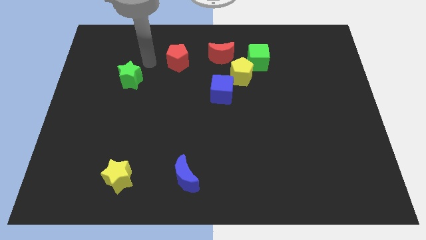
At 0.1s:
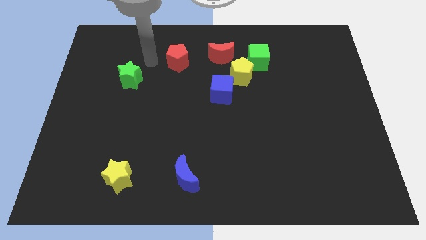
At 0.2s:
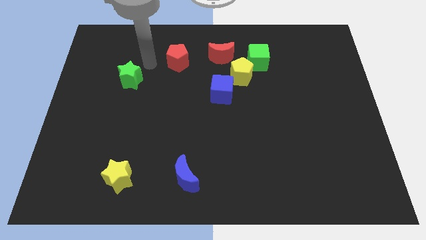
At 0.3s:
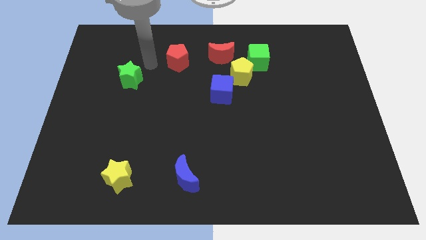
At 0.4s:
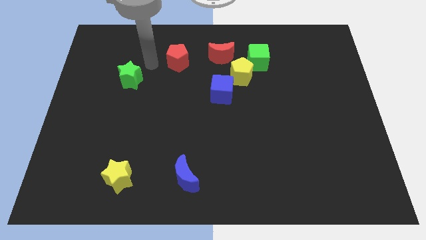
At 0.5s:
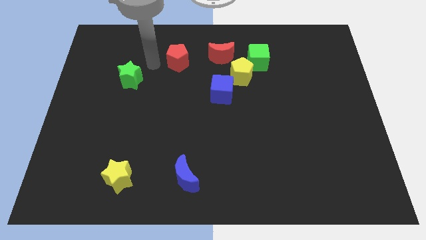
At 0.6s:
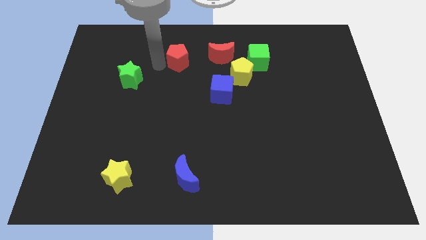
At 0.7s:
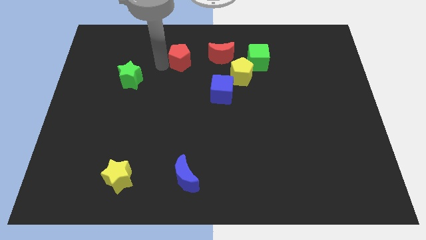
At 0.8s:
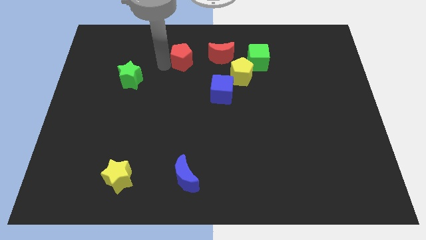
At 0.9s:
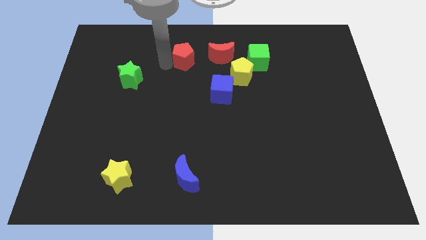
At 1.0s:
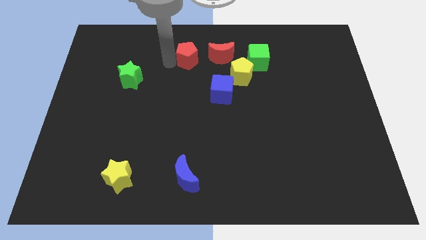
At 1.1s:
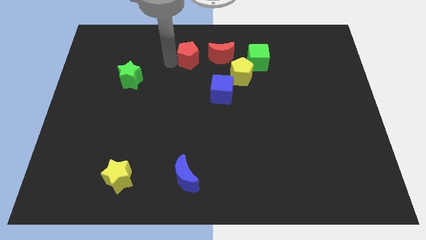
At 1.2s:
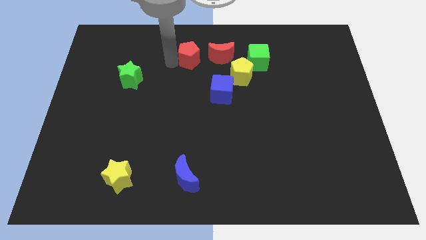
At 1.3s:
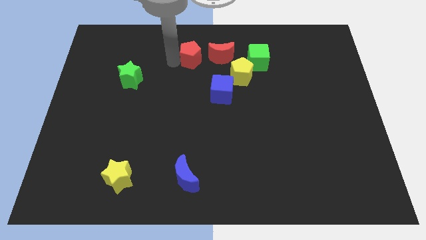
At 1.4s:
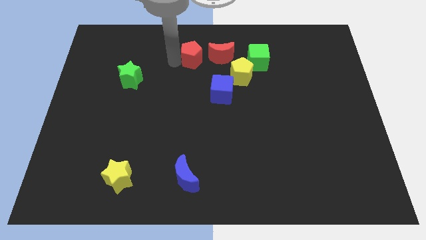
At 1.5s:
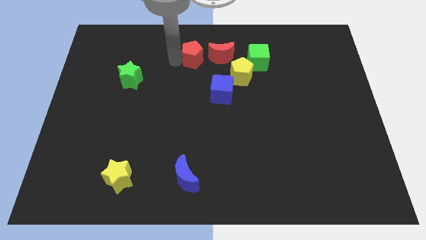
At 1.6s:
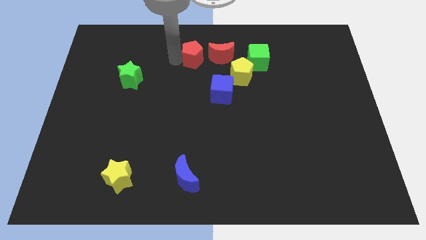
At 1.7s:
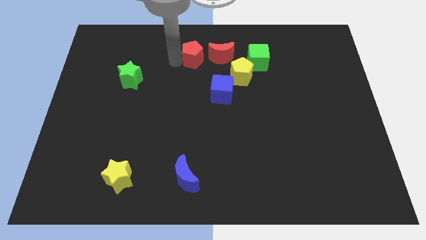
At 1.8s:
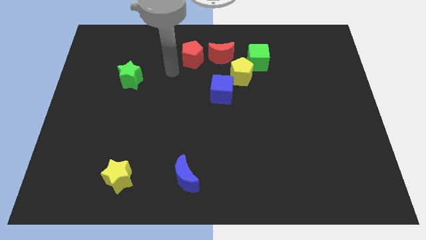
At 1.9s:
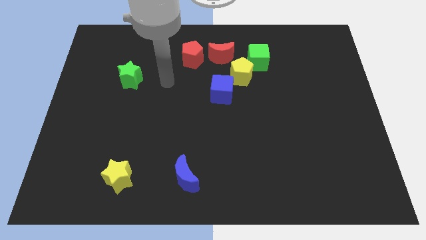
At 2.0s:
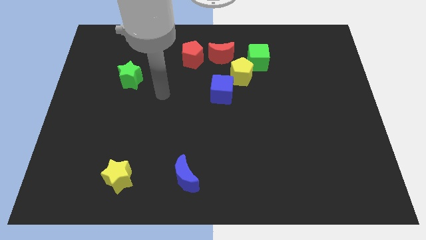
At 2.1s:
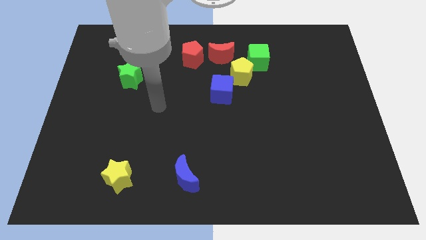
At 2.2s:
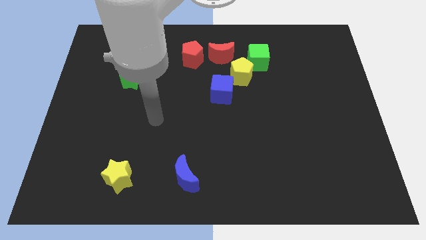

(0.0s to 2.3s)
place red pentagon to the left side of red crescent

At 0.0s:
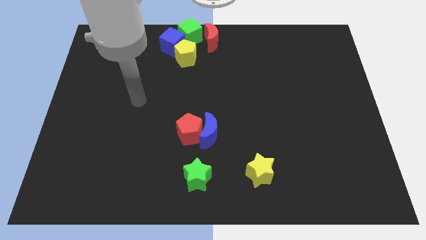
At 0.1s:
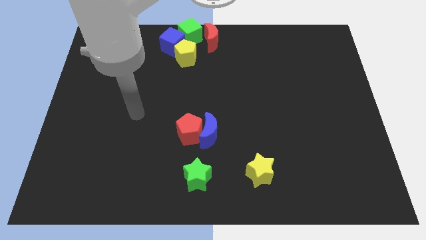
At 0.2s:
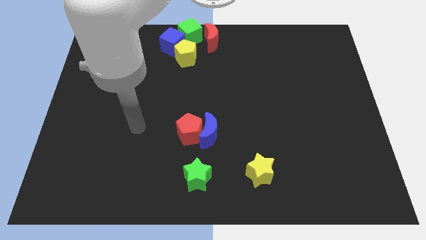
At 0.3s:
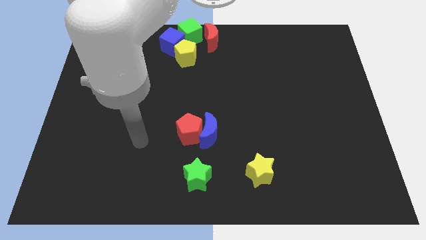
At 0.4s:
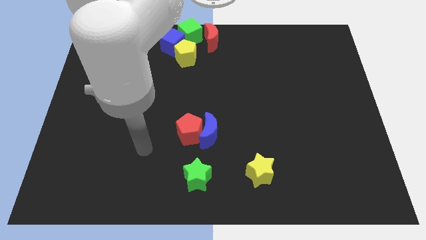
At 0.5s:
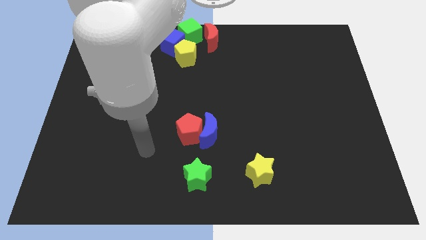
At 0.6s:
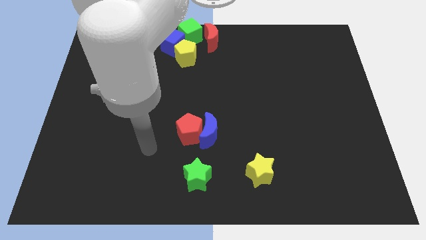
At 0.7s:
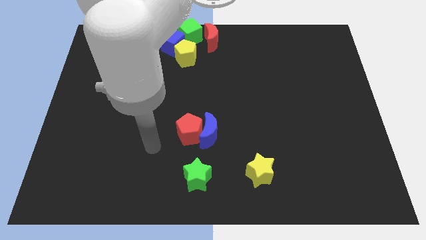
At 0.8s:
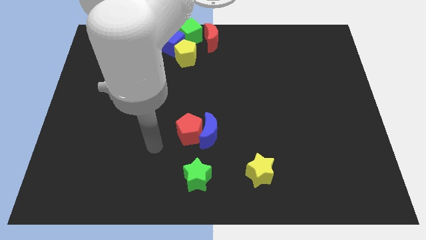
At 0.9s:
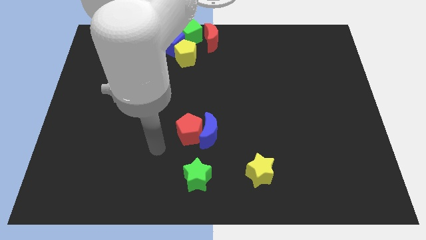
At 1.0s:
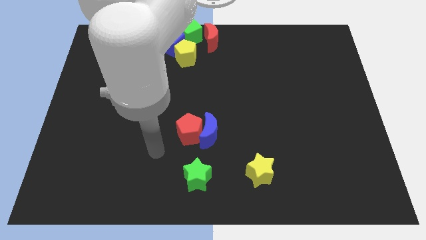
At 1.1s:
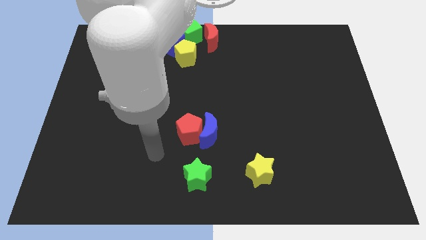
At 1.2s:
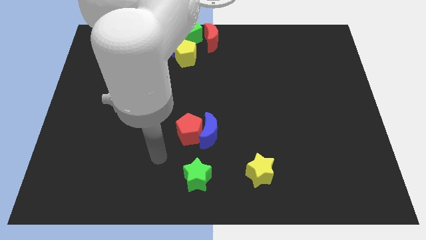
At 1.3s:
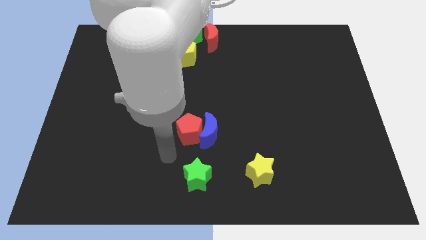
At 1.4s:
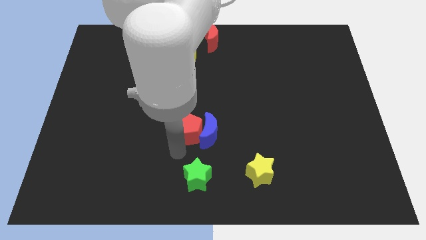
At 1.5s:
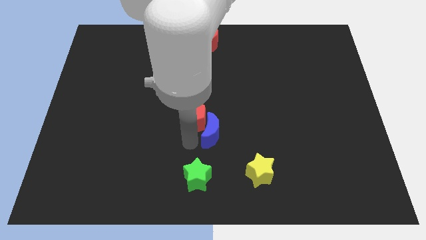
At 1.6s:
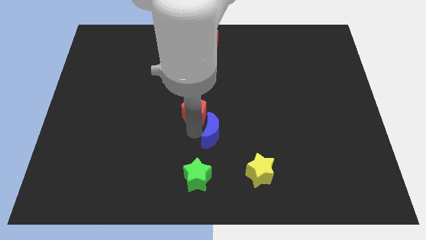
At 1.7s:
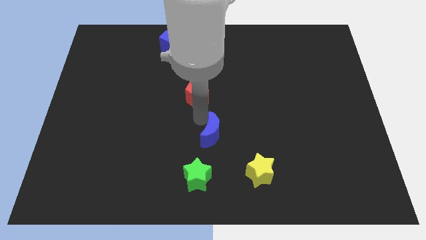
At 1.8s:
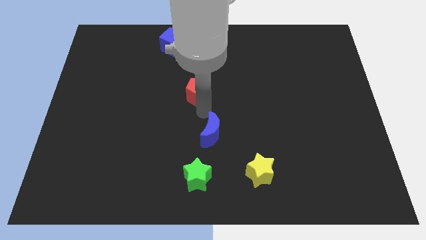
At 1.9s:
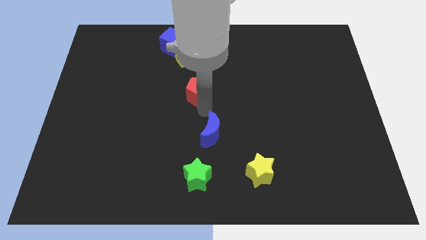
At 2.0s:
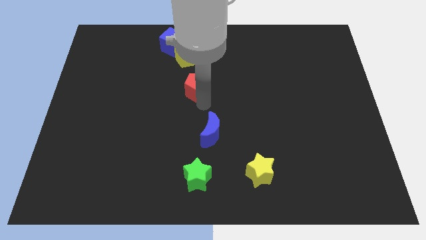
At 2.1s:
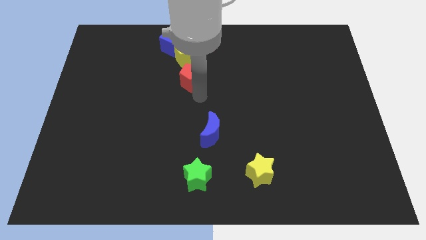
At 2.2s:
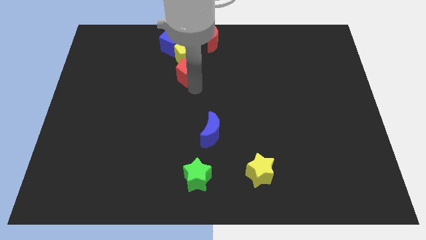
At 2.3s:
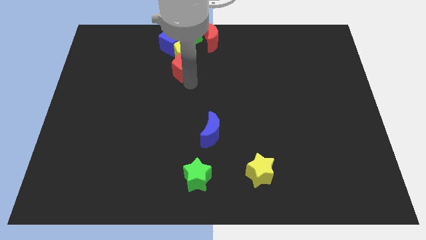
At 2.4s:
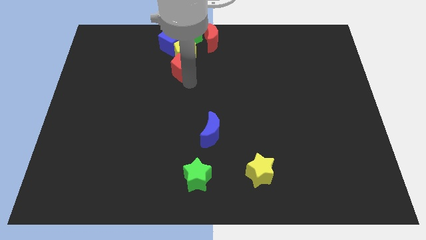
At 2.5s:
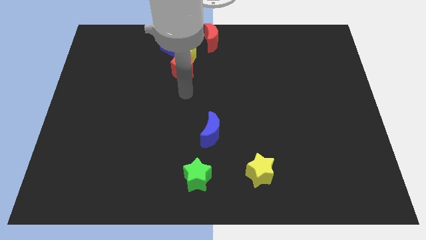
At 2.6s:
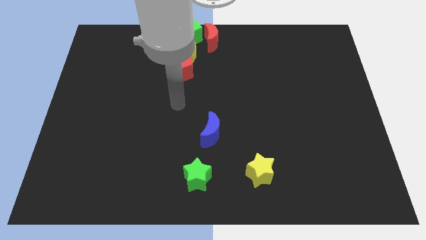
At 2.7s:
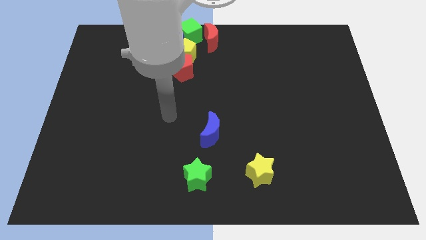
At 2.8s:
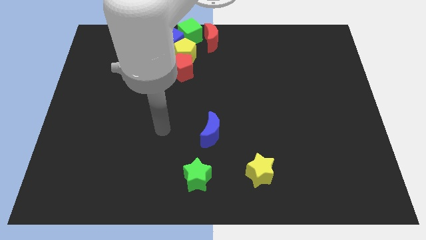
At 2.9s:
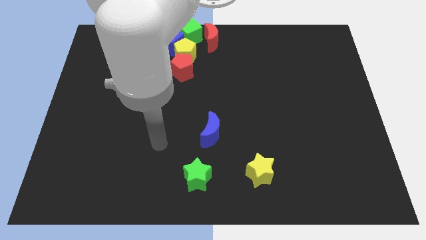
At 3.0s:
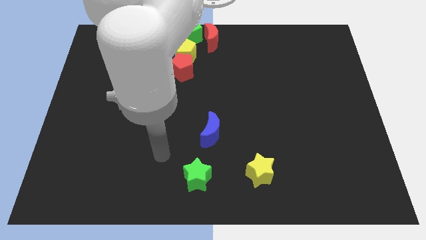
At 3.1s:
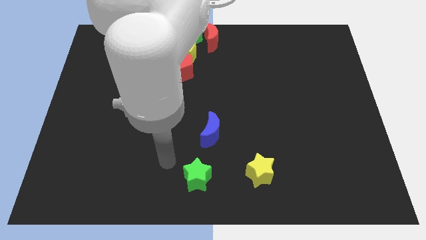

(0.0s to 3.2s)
move the red pentagon towards the bottom of the yellow pentagon

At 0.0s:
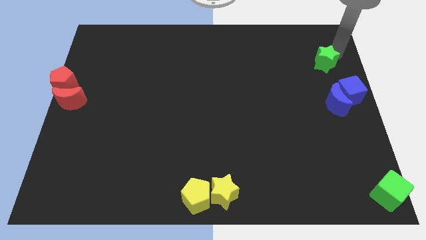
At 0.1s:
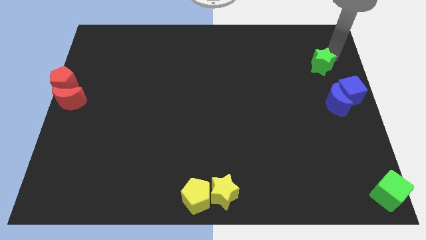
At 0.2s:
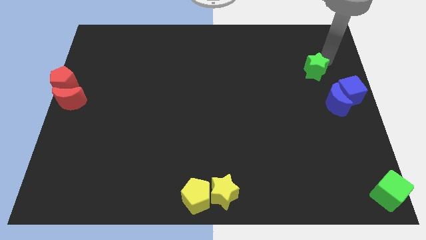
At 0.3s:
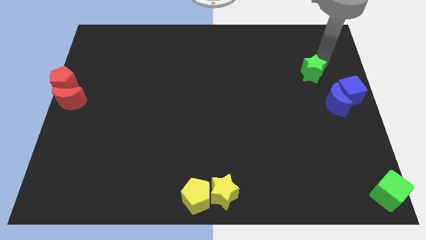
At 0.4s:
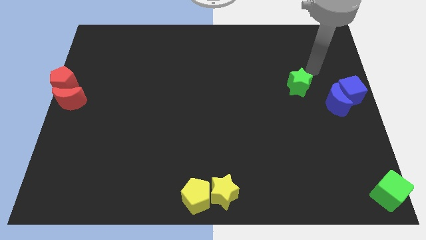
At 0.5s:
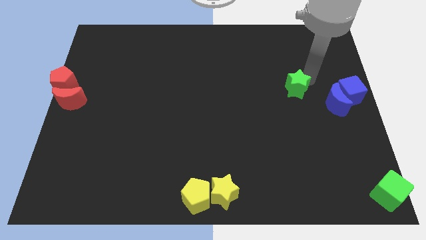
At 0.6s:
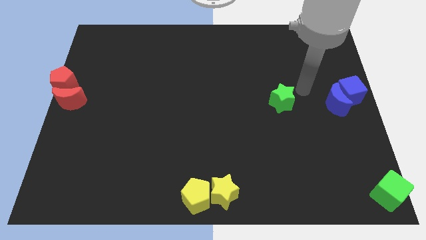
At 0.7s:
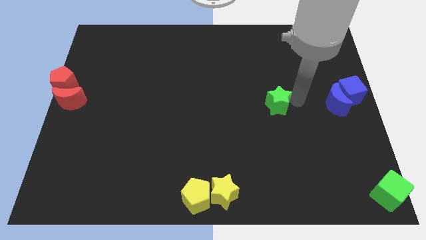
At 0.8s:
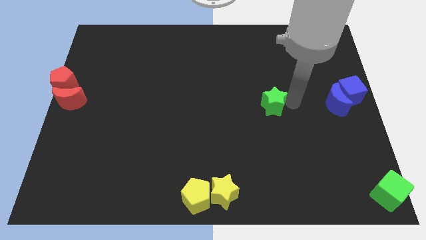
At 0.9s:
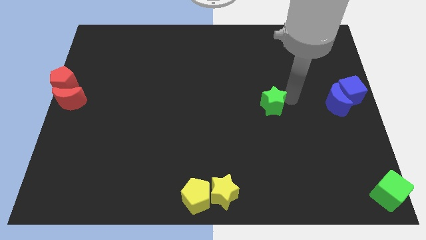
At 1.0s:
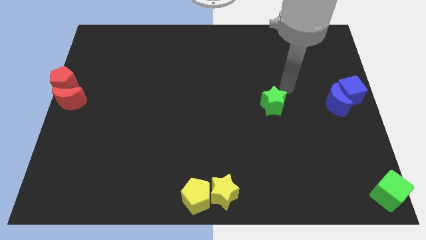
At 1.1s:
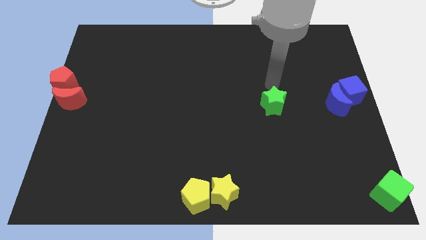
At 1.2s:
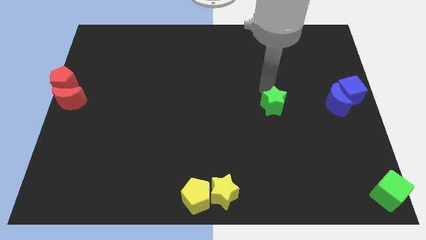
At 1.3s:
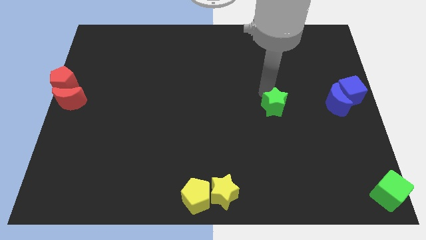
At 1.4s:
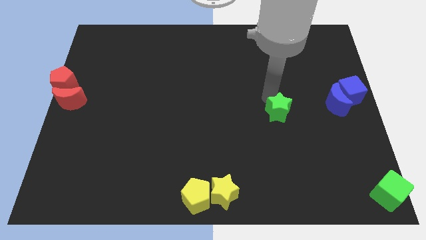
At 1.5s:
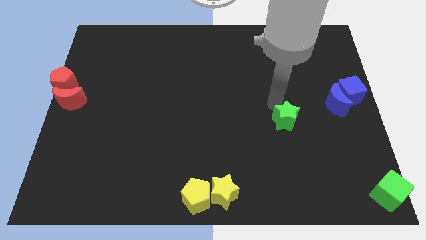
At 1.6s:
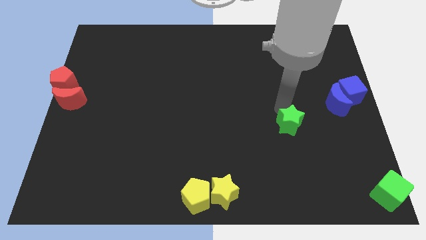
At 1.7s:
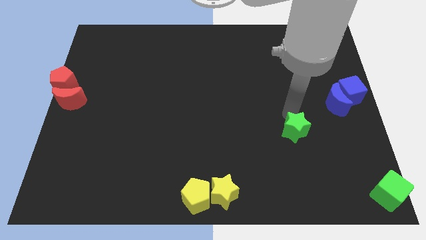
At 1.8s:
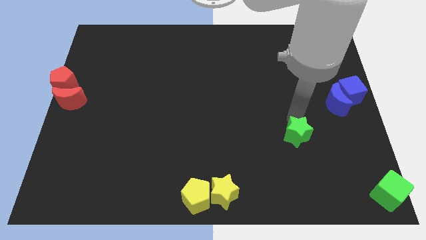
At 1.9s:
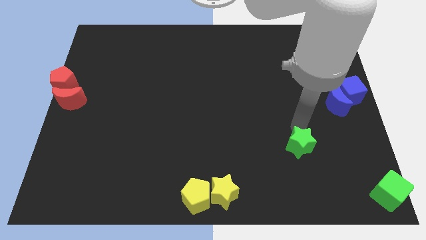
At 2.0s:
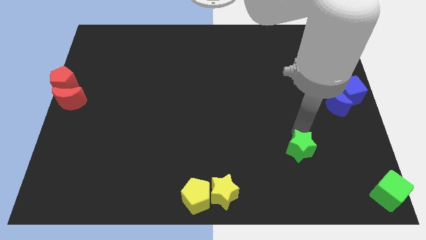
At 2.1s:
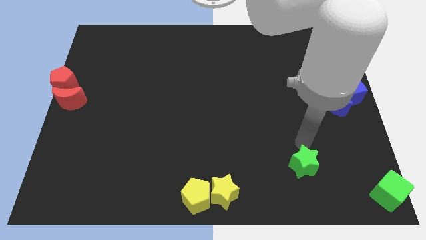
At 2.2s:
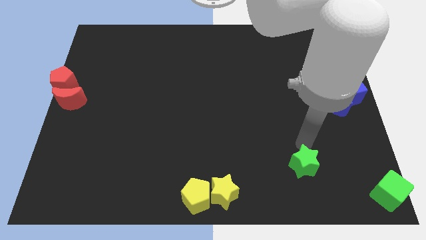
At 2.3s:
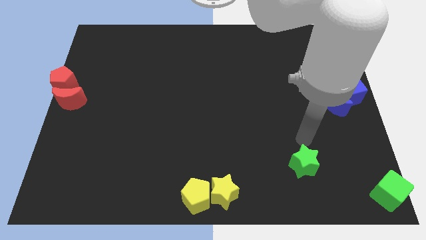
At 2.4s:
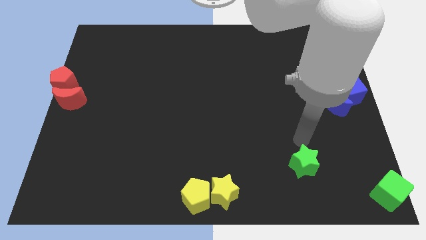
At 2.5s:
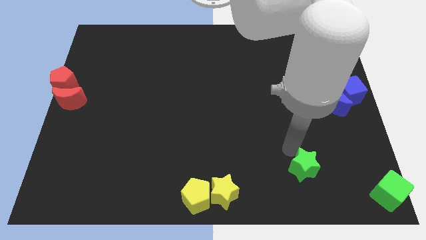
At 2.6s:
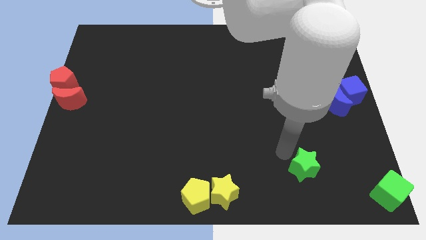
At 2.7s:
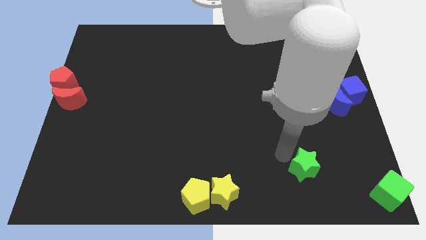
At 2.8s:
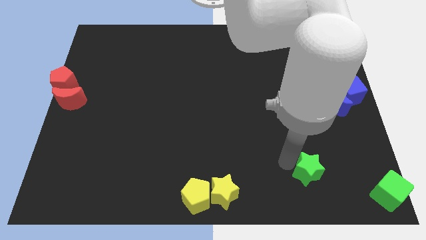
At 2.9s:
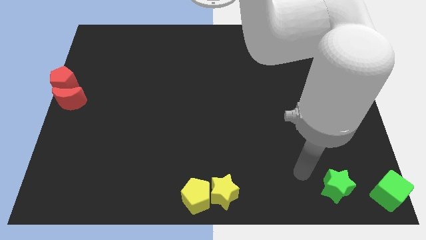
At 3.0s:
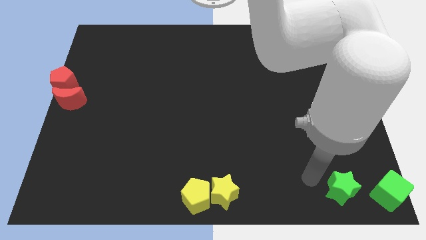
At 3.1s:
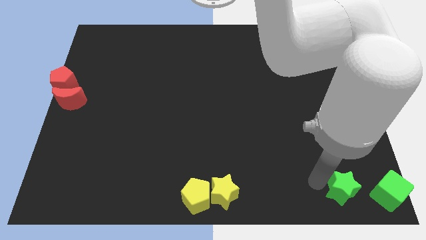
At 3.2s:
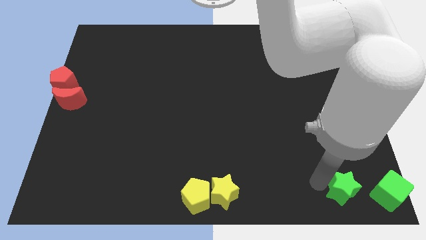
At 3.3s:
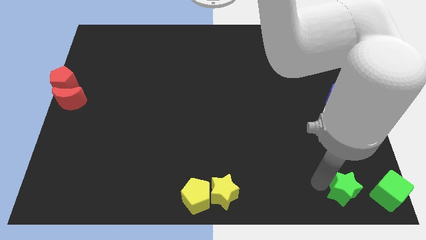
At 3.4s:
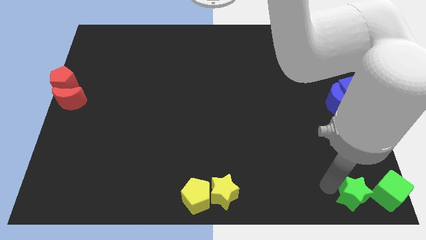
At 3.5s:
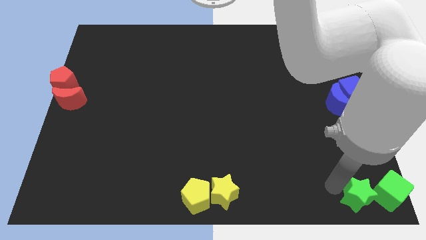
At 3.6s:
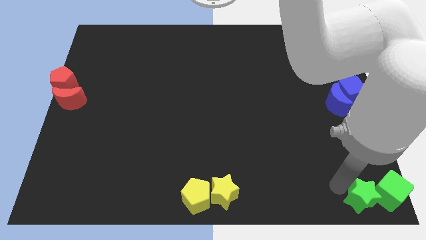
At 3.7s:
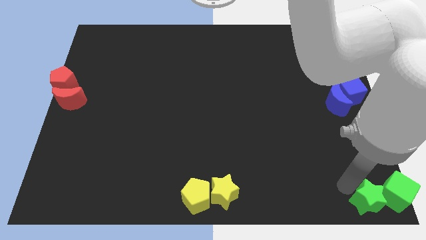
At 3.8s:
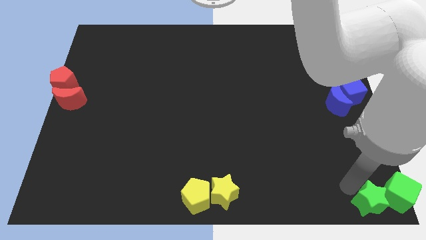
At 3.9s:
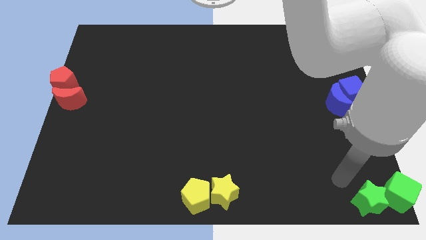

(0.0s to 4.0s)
drag the green star into the left side of the green cube
